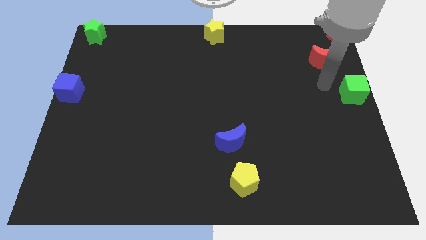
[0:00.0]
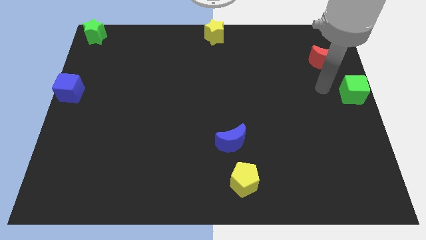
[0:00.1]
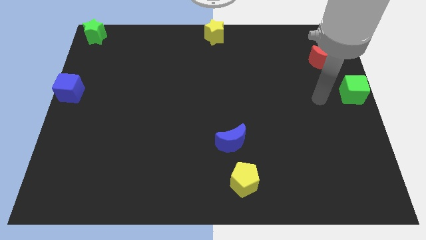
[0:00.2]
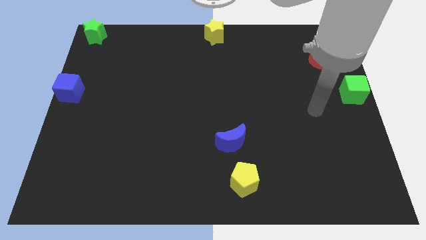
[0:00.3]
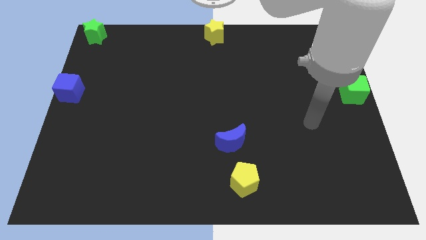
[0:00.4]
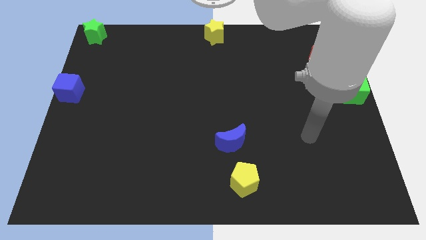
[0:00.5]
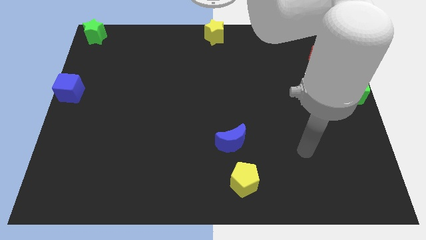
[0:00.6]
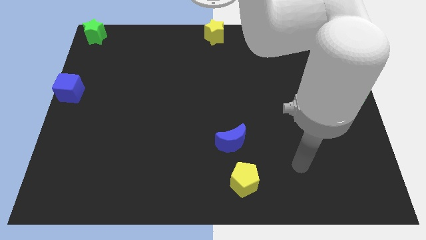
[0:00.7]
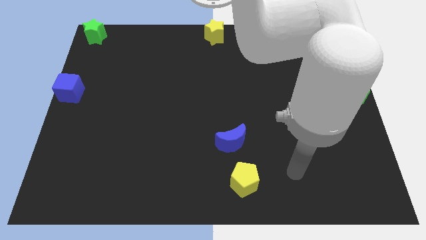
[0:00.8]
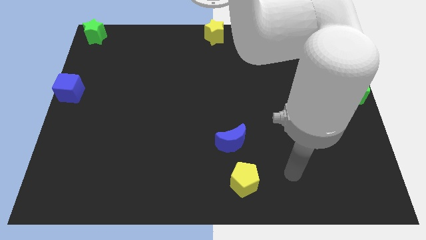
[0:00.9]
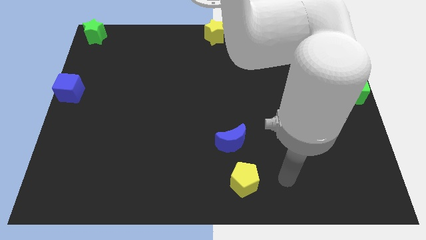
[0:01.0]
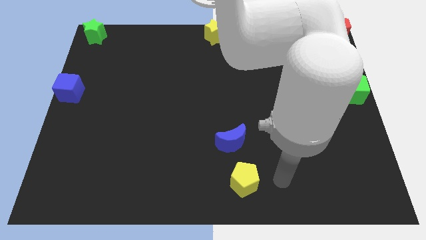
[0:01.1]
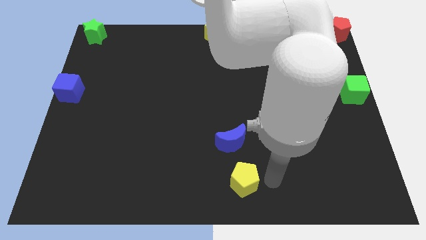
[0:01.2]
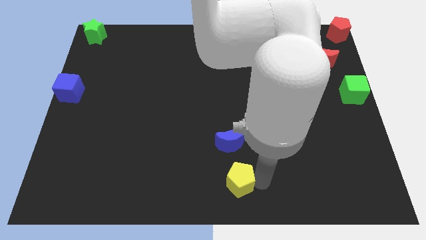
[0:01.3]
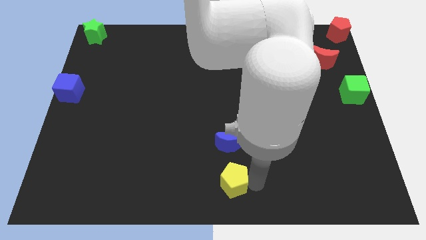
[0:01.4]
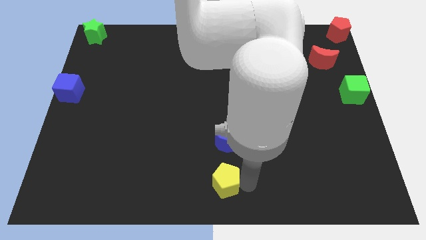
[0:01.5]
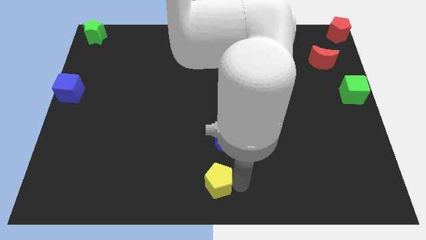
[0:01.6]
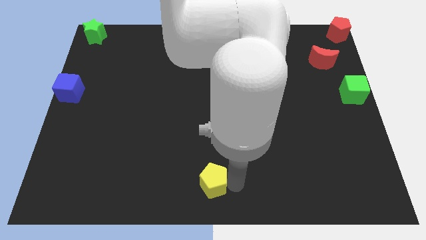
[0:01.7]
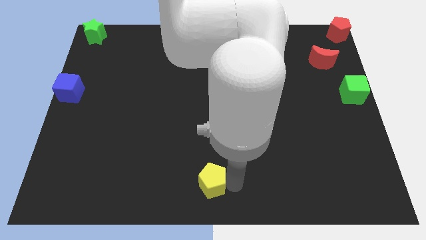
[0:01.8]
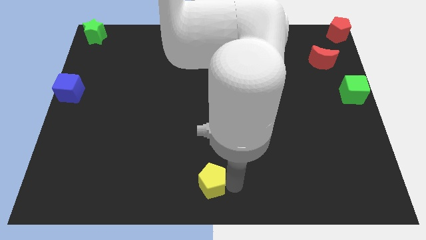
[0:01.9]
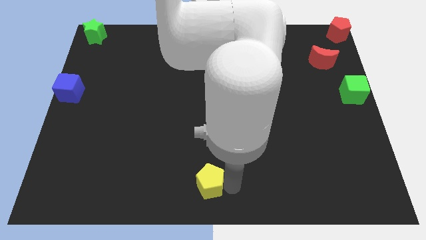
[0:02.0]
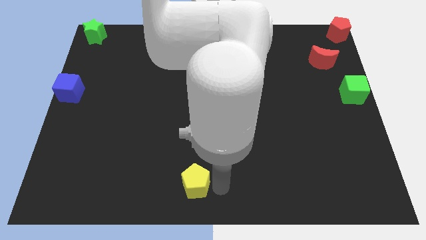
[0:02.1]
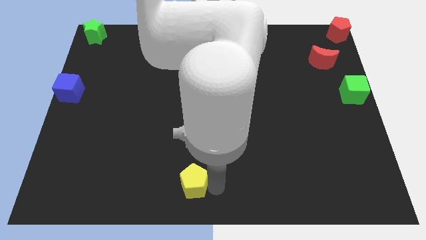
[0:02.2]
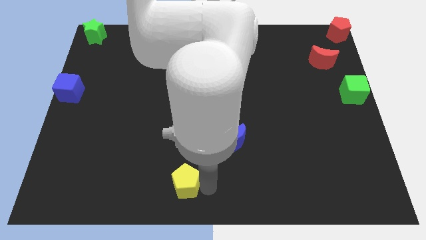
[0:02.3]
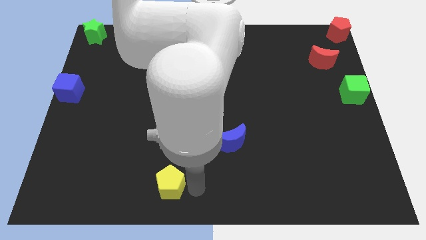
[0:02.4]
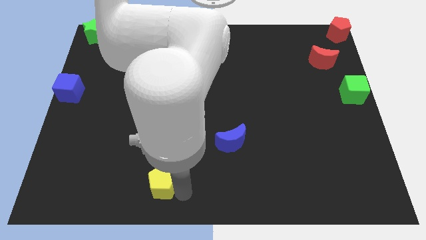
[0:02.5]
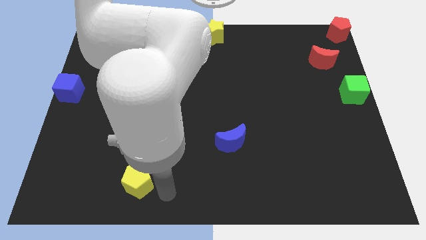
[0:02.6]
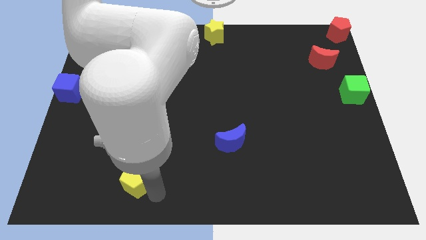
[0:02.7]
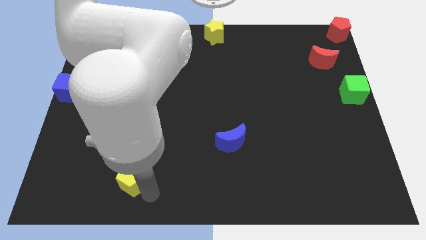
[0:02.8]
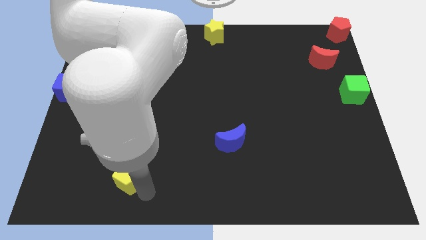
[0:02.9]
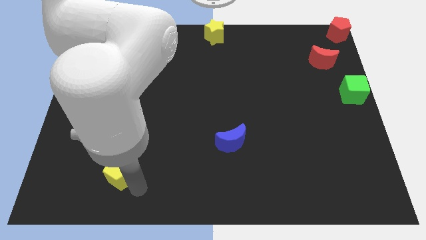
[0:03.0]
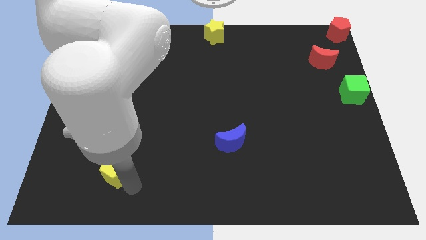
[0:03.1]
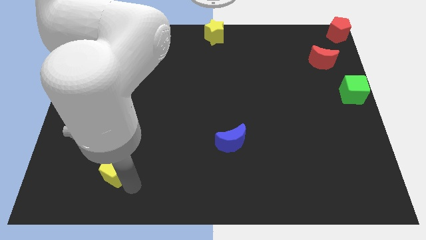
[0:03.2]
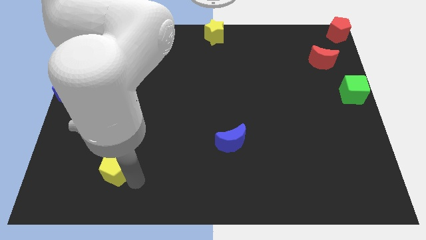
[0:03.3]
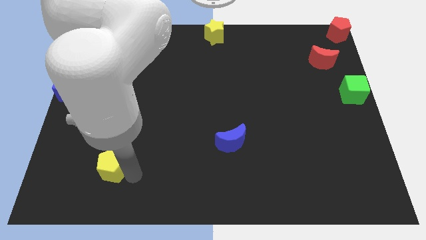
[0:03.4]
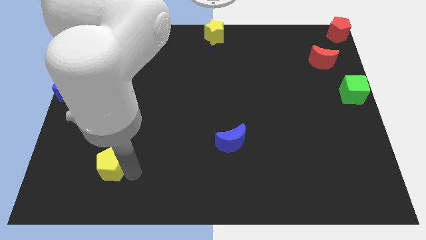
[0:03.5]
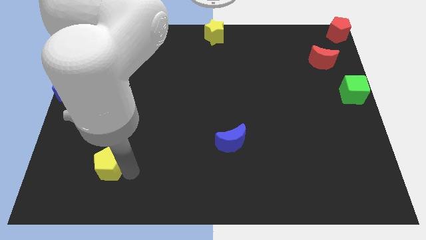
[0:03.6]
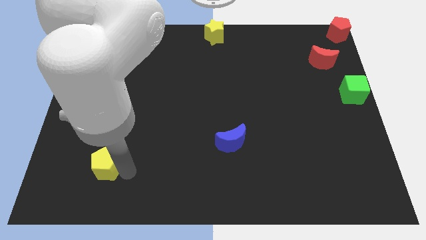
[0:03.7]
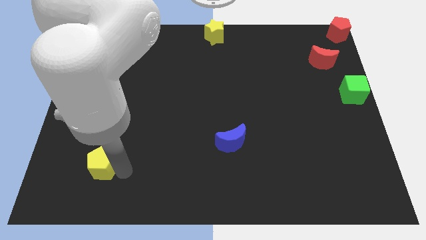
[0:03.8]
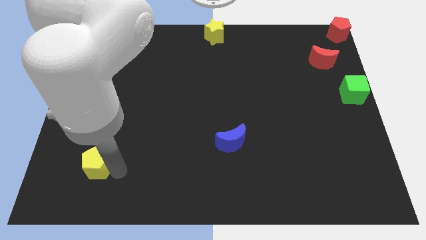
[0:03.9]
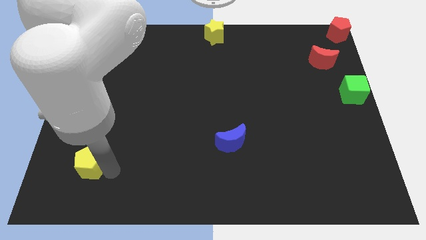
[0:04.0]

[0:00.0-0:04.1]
push the yellow pentagon towards the bottom left side of the table

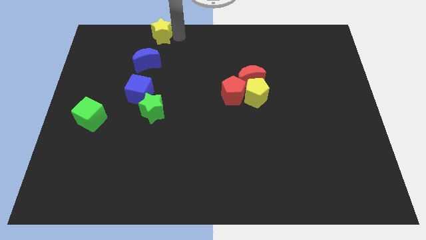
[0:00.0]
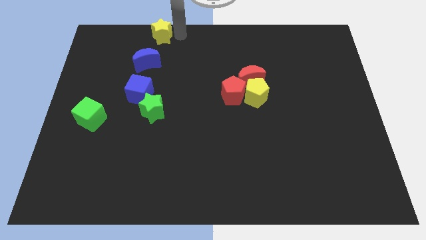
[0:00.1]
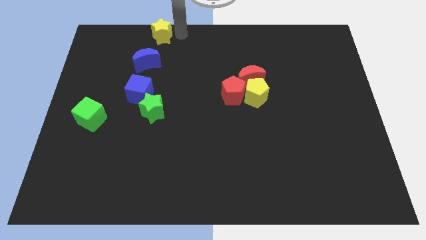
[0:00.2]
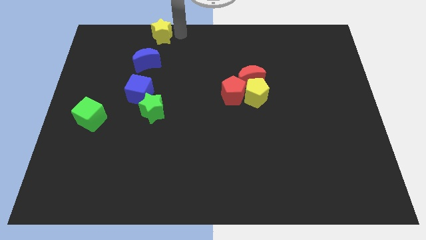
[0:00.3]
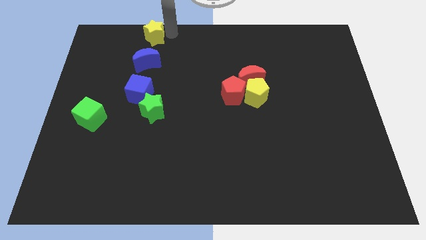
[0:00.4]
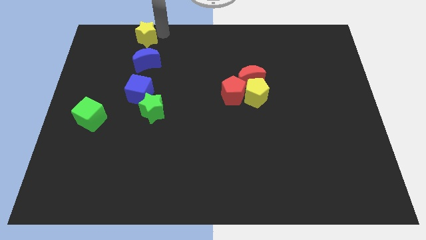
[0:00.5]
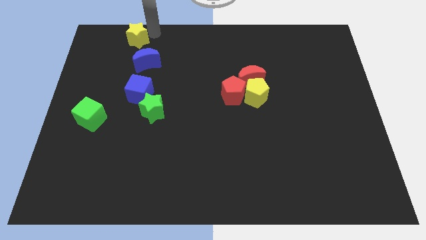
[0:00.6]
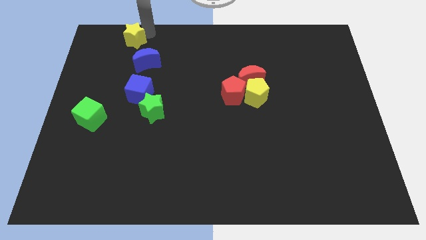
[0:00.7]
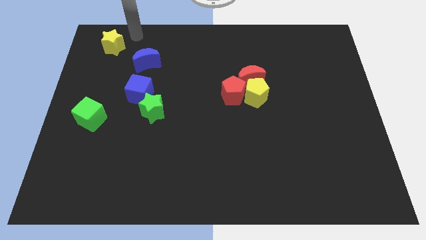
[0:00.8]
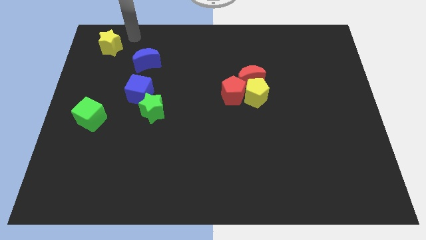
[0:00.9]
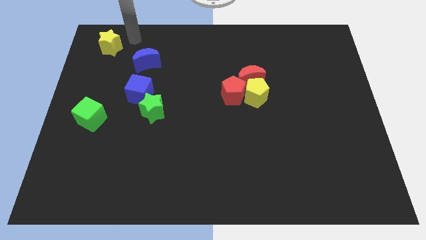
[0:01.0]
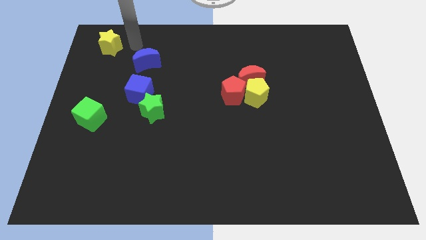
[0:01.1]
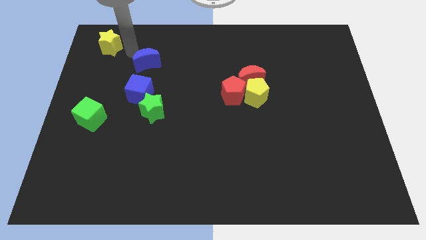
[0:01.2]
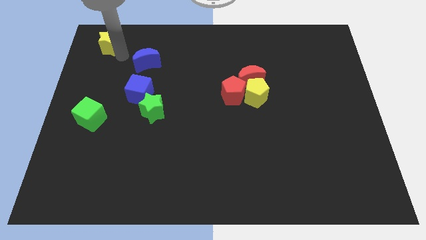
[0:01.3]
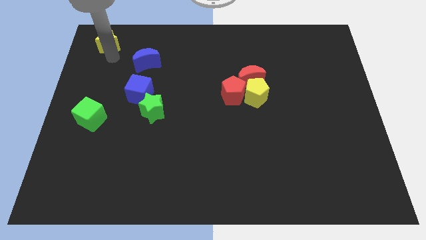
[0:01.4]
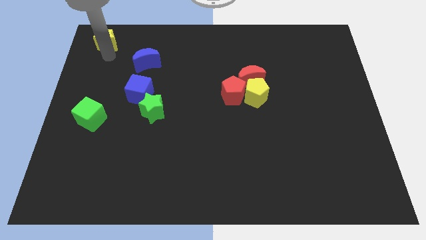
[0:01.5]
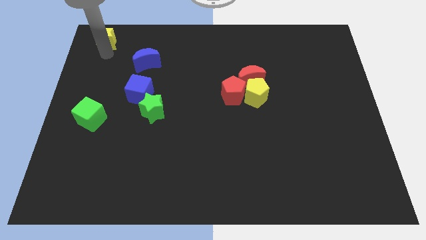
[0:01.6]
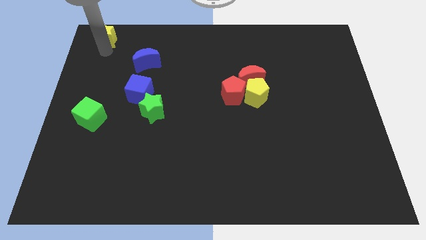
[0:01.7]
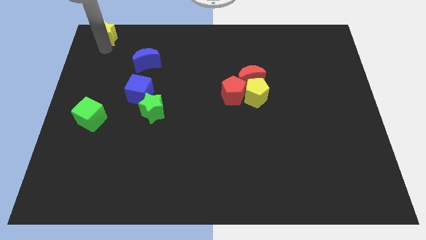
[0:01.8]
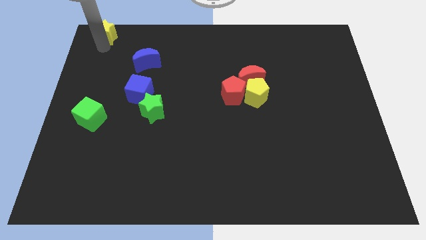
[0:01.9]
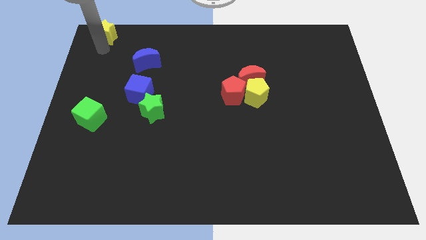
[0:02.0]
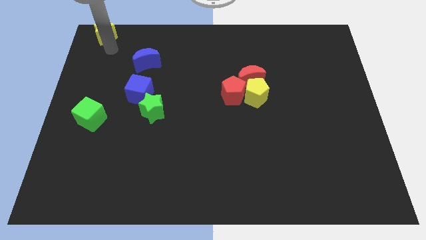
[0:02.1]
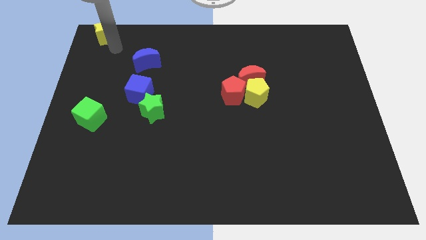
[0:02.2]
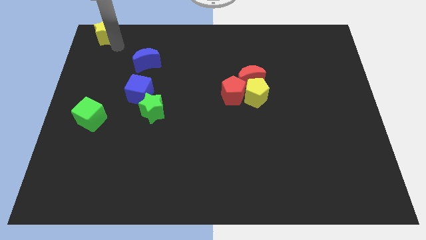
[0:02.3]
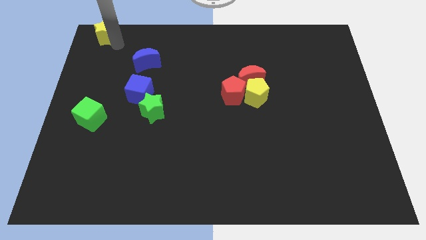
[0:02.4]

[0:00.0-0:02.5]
slightly move the yellow star to the top left

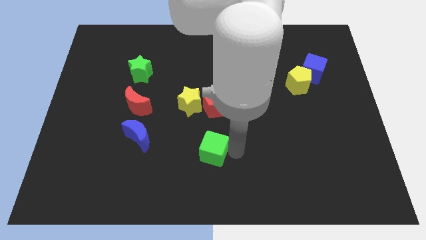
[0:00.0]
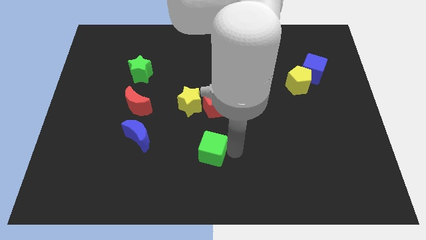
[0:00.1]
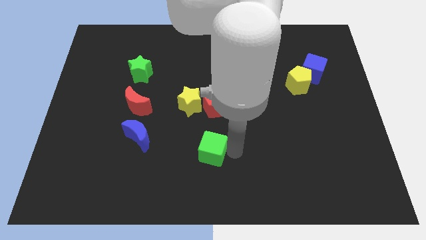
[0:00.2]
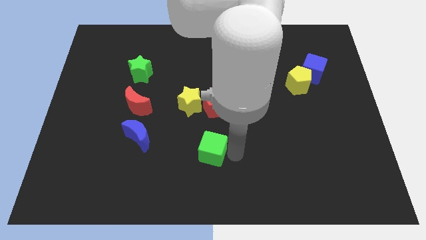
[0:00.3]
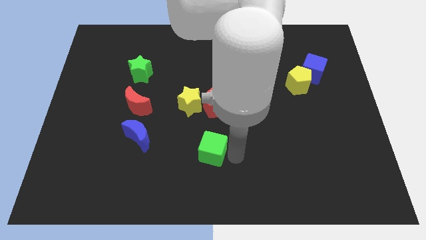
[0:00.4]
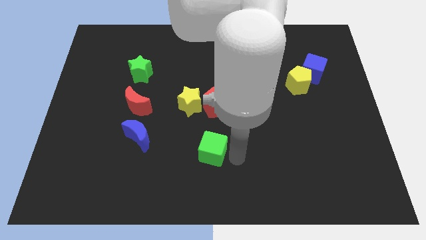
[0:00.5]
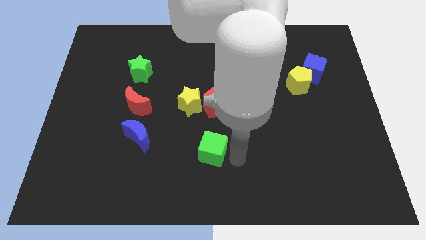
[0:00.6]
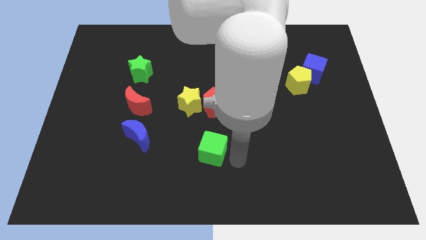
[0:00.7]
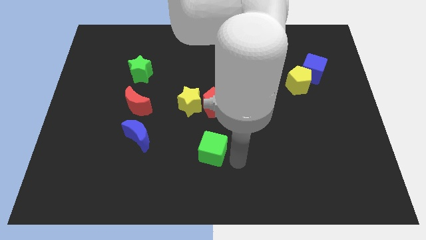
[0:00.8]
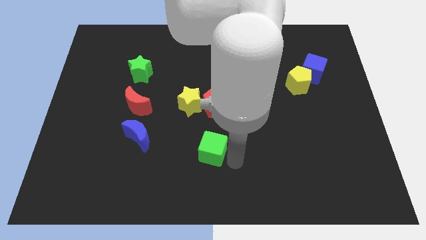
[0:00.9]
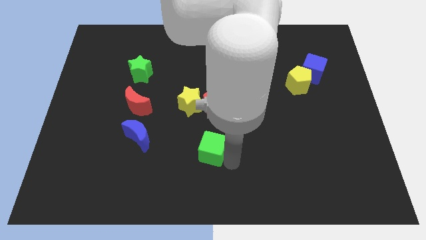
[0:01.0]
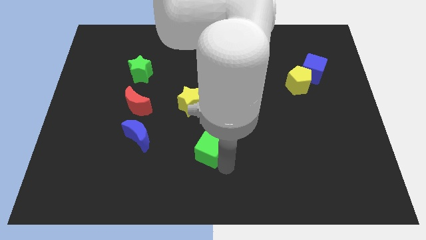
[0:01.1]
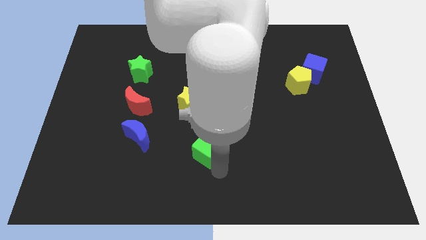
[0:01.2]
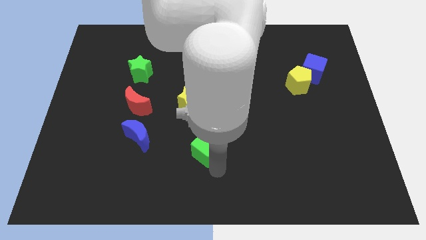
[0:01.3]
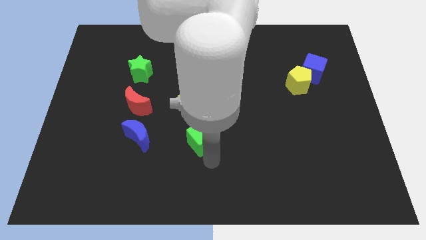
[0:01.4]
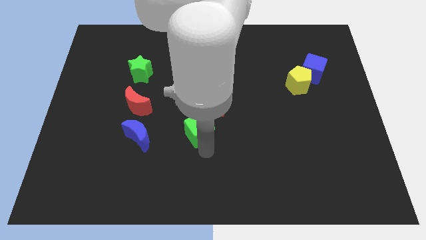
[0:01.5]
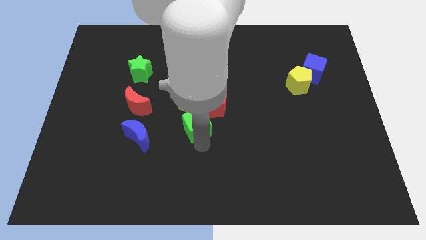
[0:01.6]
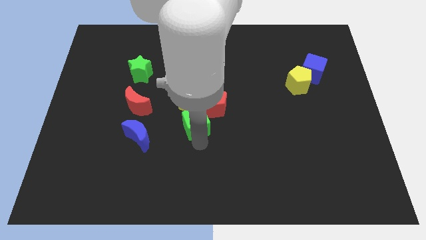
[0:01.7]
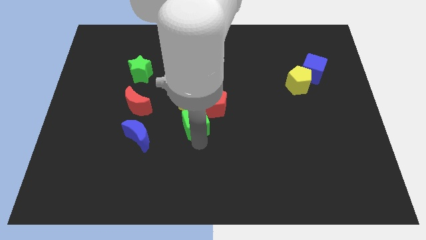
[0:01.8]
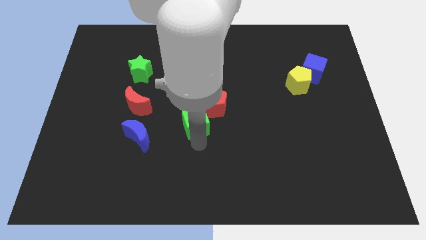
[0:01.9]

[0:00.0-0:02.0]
move the green cube close to the yellow star

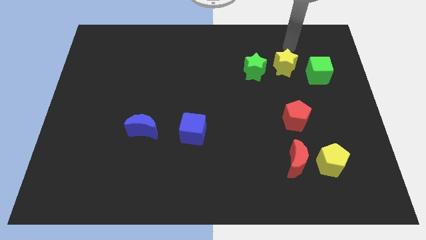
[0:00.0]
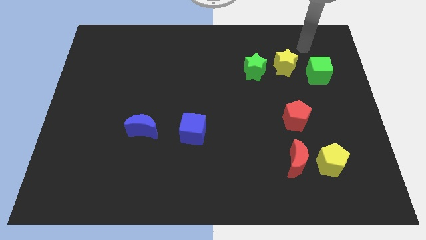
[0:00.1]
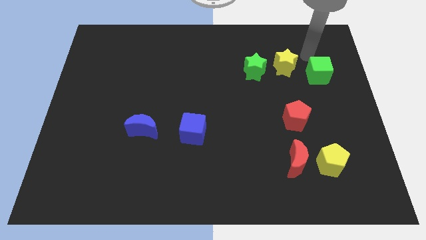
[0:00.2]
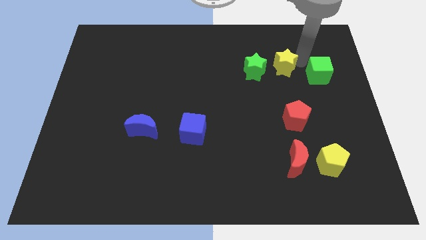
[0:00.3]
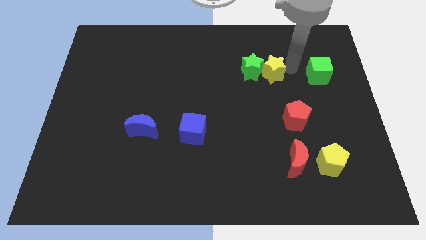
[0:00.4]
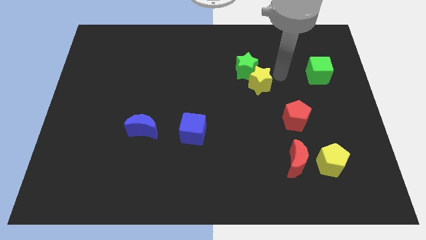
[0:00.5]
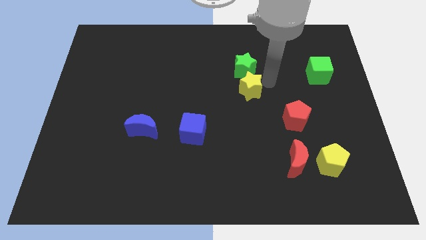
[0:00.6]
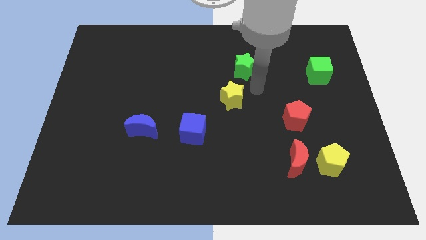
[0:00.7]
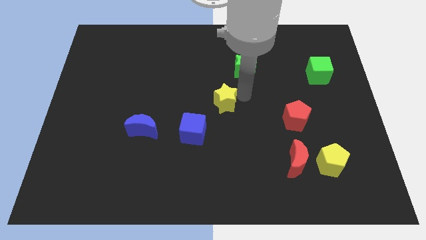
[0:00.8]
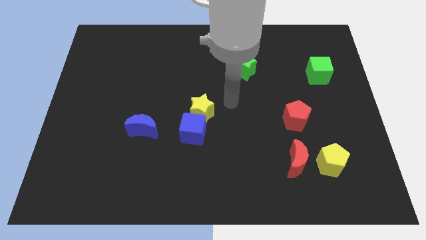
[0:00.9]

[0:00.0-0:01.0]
move the yellow star to the top of the blue cube
